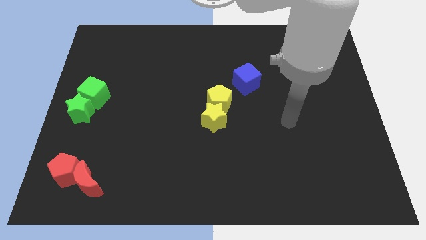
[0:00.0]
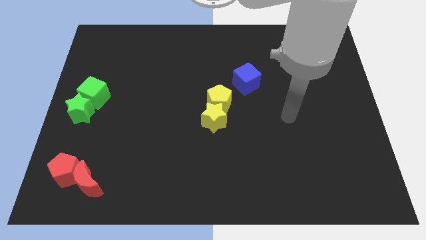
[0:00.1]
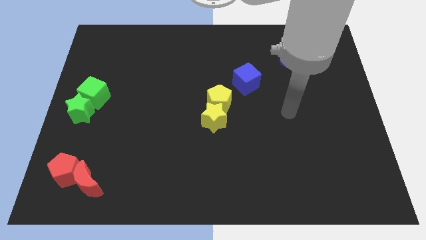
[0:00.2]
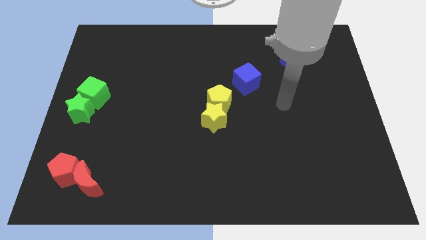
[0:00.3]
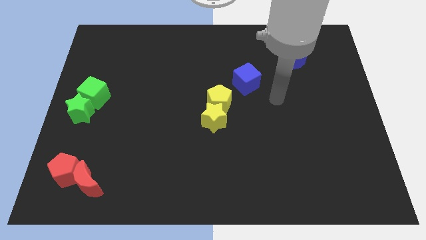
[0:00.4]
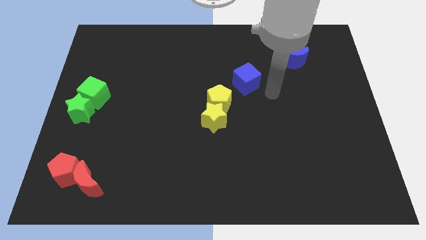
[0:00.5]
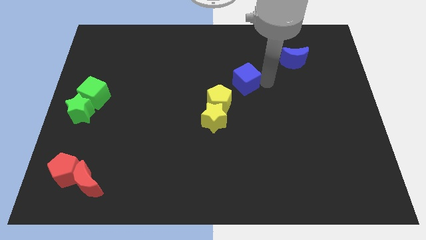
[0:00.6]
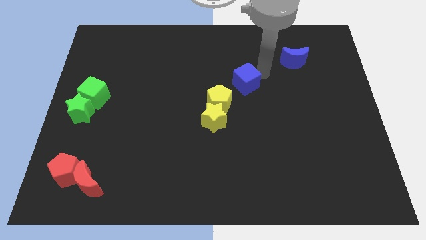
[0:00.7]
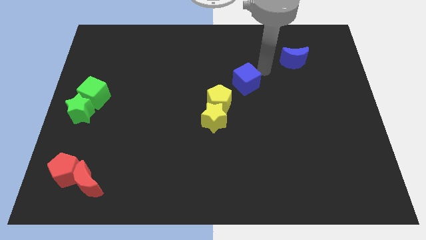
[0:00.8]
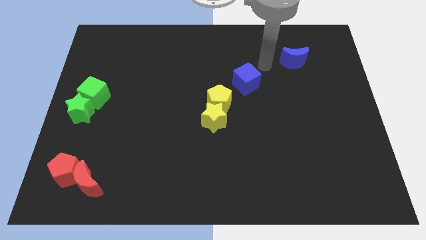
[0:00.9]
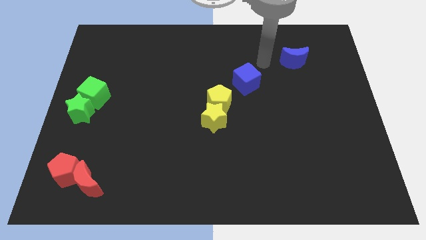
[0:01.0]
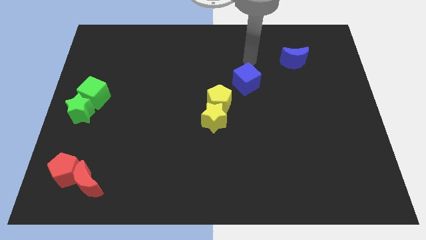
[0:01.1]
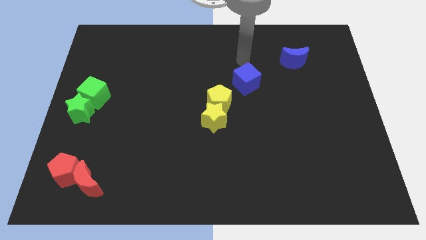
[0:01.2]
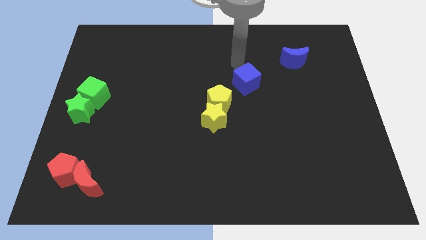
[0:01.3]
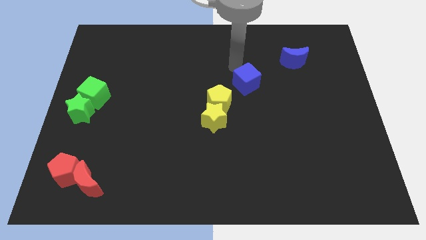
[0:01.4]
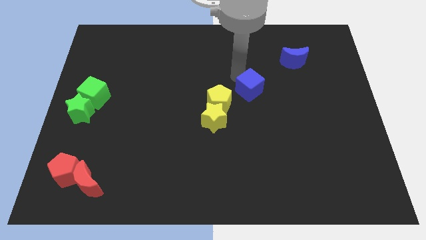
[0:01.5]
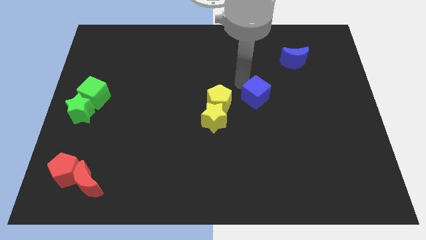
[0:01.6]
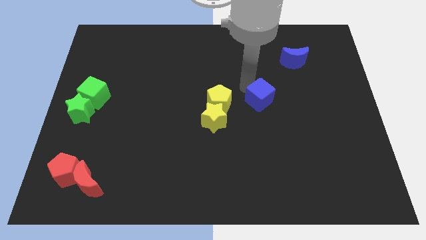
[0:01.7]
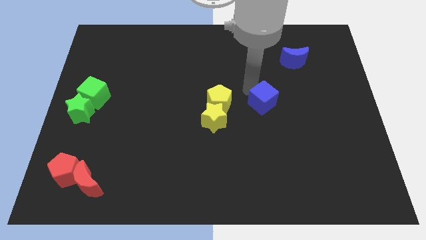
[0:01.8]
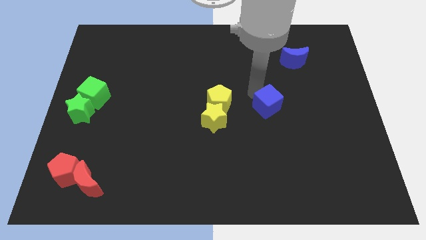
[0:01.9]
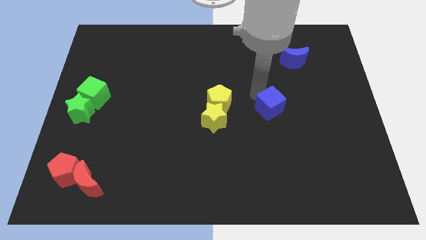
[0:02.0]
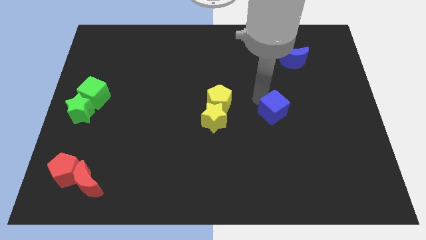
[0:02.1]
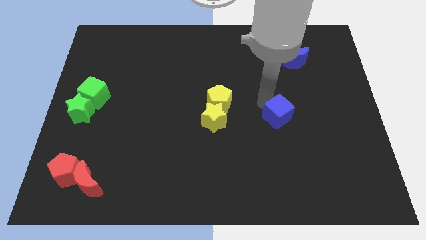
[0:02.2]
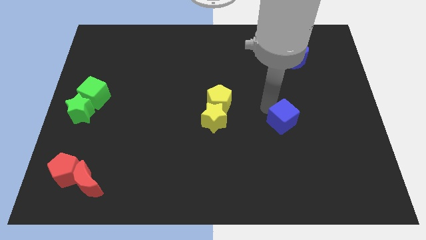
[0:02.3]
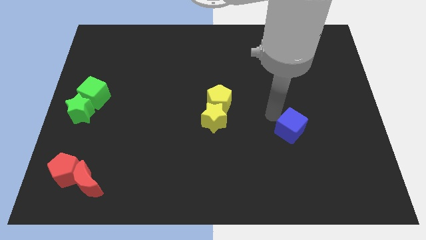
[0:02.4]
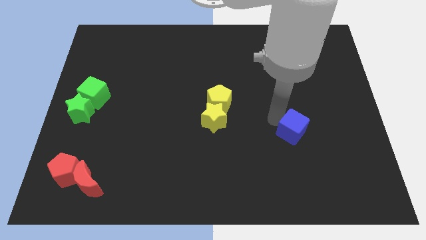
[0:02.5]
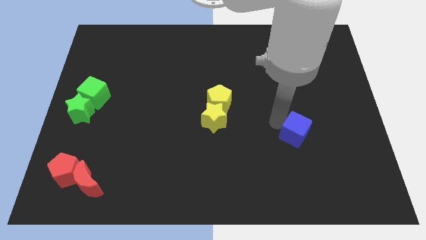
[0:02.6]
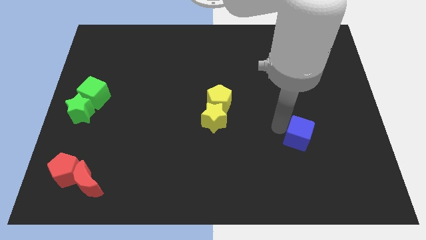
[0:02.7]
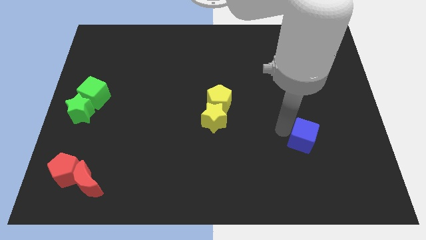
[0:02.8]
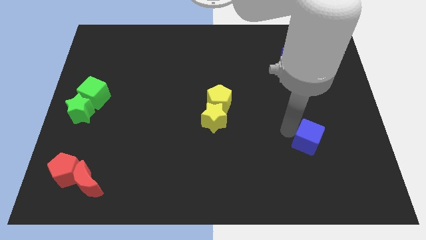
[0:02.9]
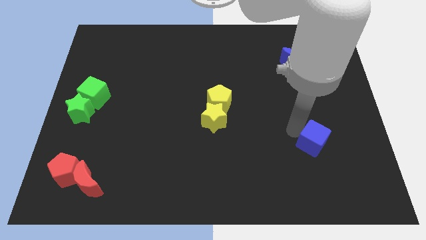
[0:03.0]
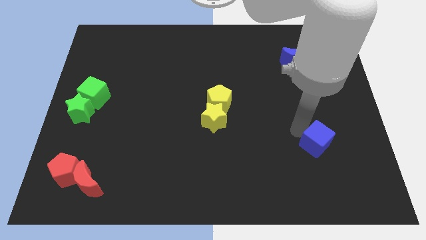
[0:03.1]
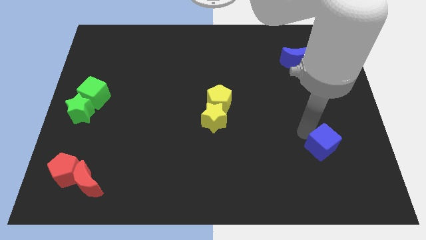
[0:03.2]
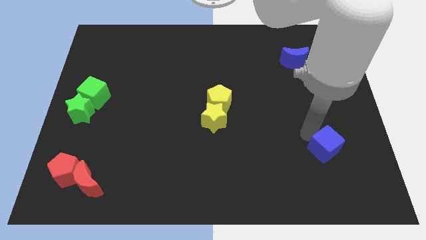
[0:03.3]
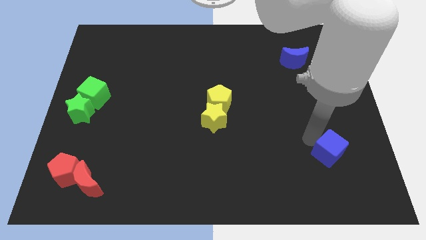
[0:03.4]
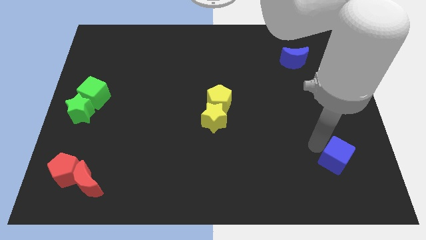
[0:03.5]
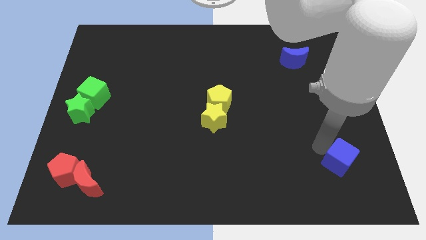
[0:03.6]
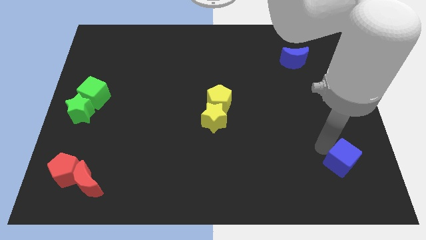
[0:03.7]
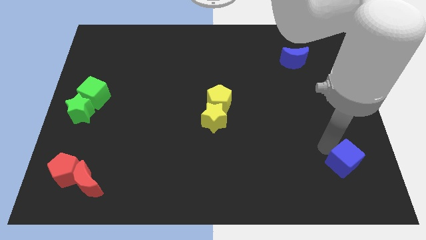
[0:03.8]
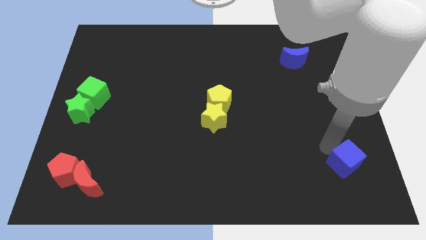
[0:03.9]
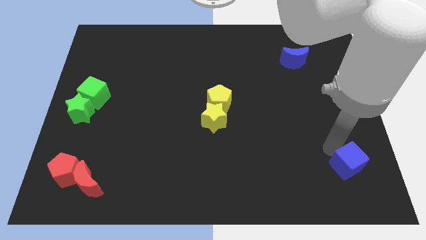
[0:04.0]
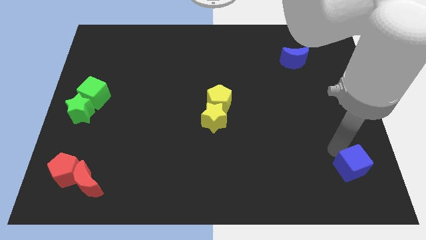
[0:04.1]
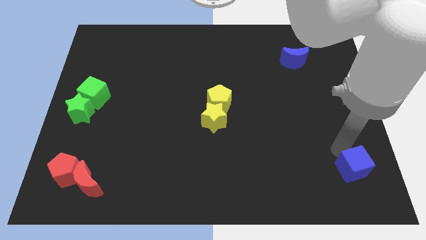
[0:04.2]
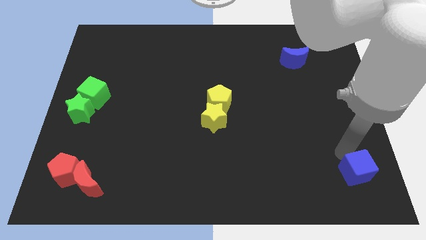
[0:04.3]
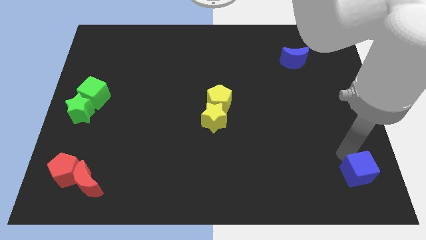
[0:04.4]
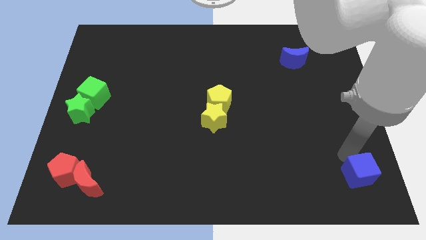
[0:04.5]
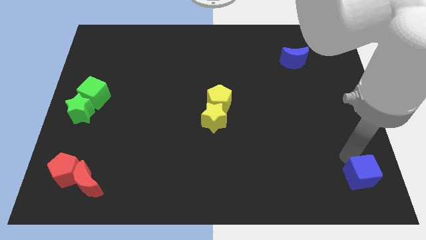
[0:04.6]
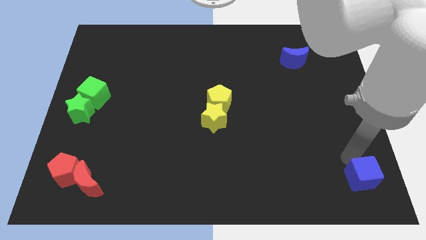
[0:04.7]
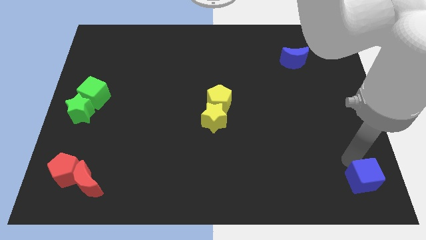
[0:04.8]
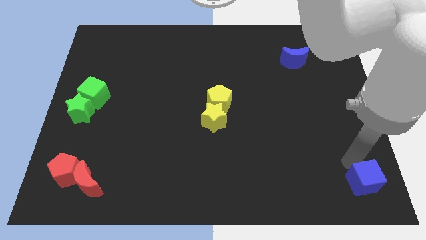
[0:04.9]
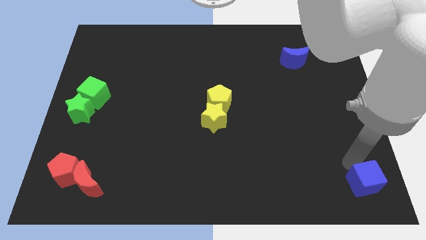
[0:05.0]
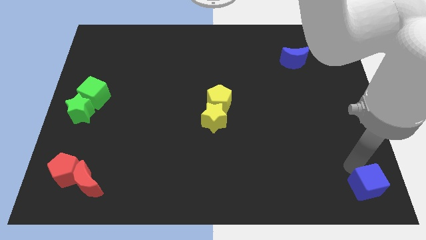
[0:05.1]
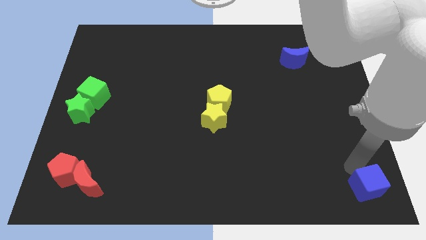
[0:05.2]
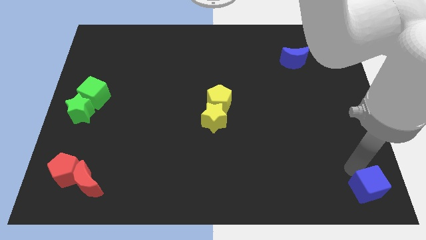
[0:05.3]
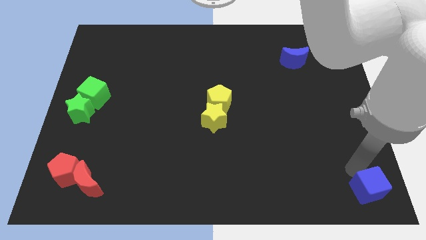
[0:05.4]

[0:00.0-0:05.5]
push the blue cube towards the bottom right corner of the board

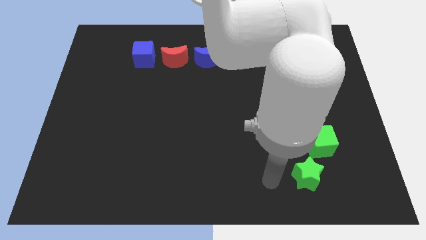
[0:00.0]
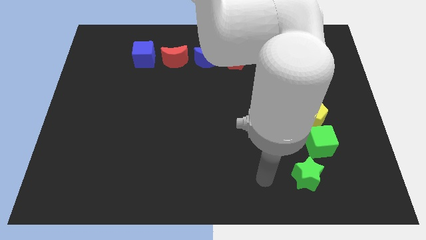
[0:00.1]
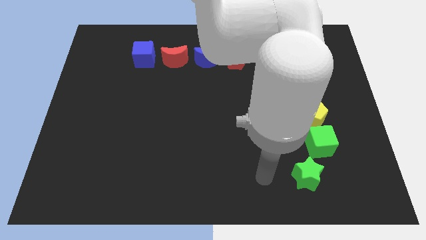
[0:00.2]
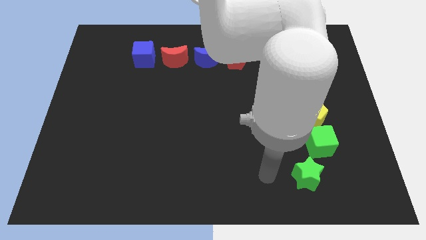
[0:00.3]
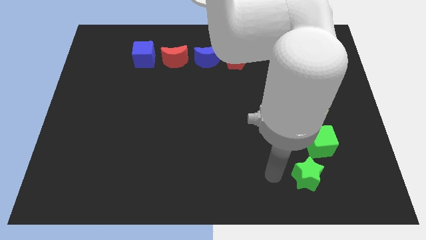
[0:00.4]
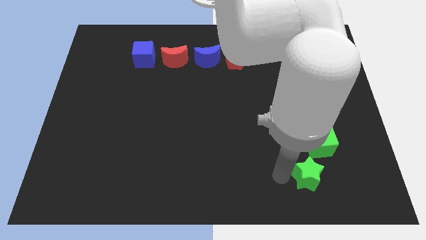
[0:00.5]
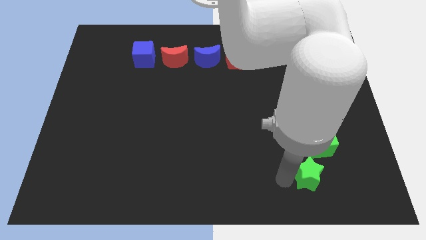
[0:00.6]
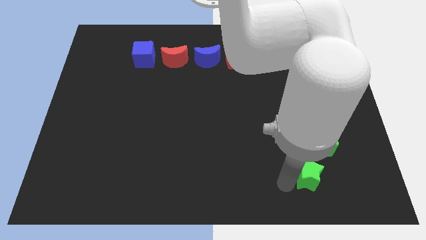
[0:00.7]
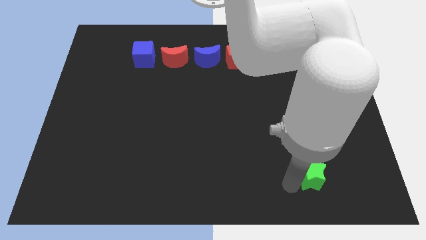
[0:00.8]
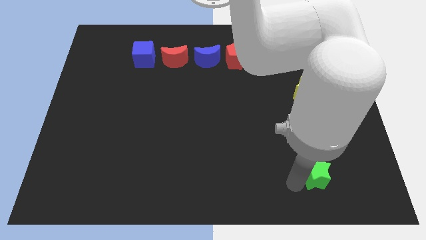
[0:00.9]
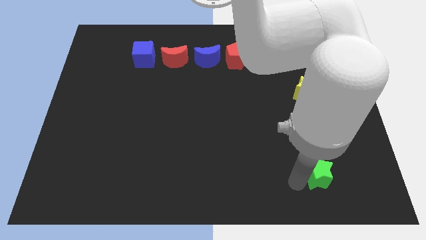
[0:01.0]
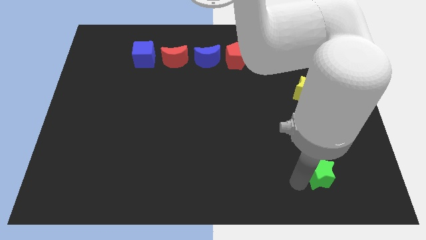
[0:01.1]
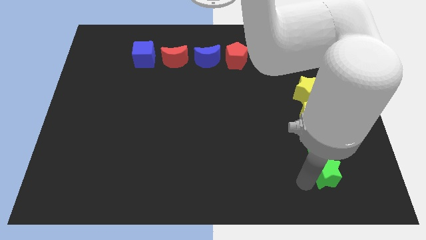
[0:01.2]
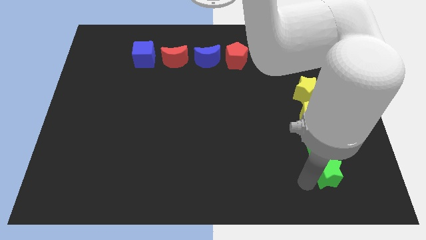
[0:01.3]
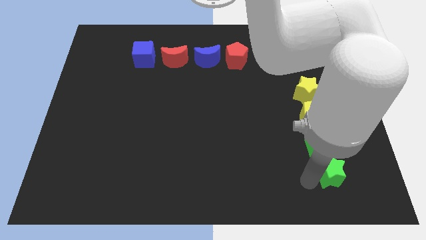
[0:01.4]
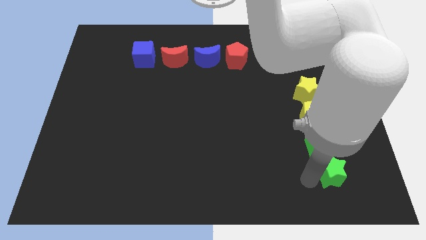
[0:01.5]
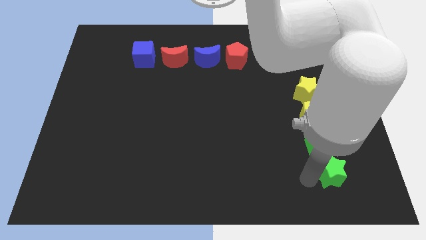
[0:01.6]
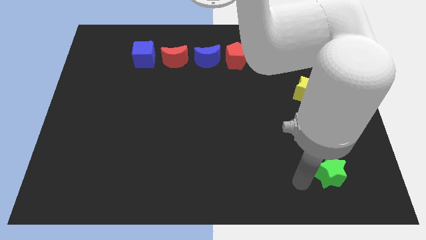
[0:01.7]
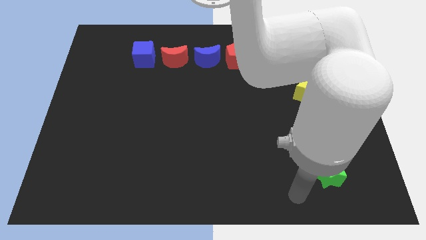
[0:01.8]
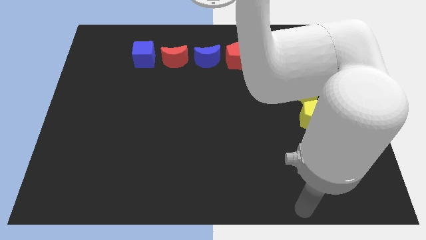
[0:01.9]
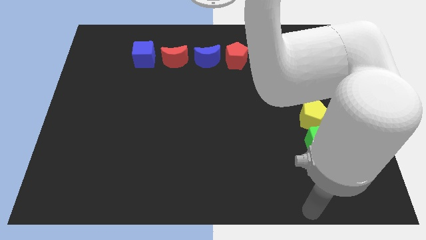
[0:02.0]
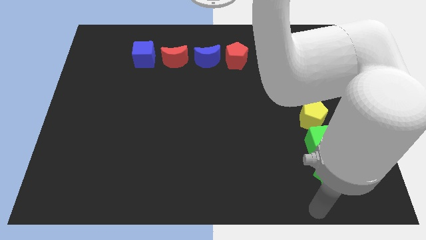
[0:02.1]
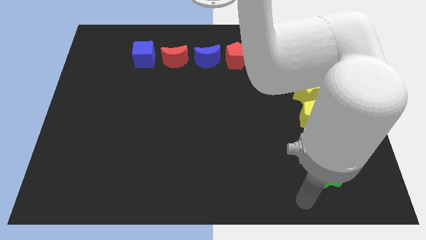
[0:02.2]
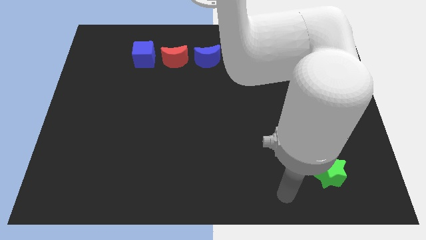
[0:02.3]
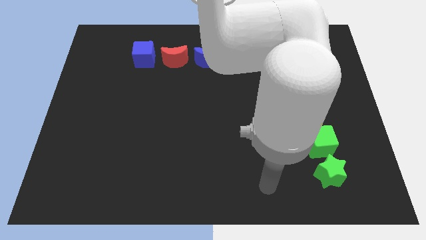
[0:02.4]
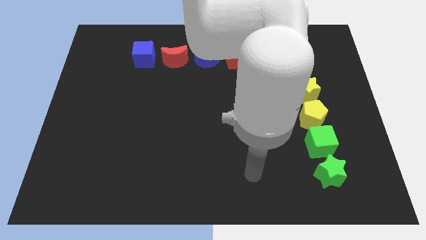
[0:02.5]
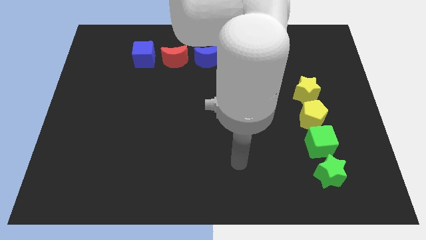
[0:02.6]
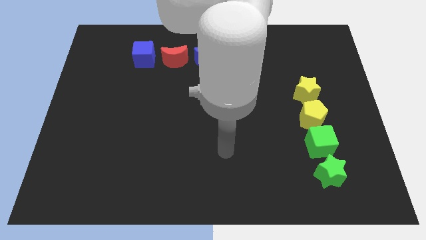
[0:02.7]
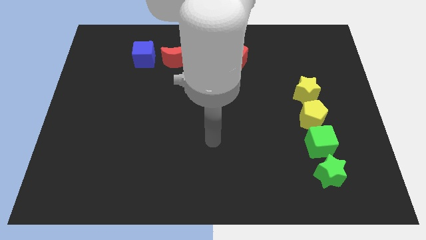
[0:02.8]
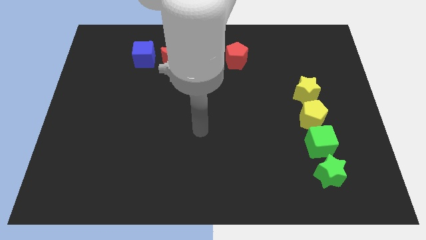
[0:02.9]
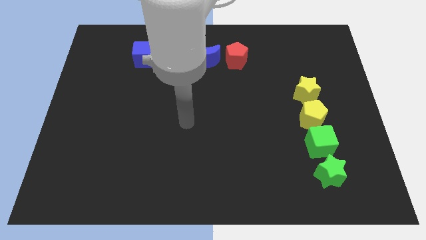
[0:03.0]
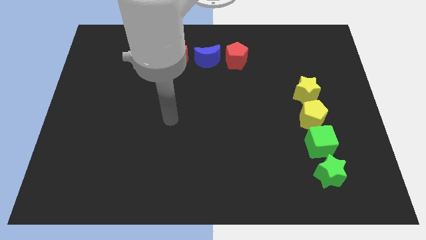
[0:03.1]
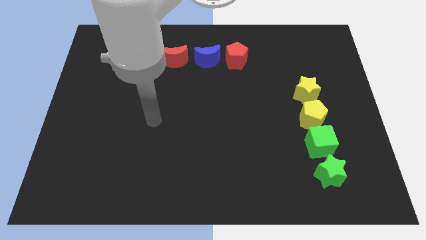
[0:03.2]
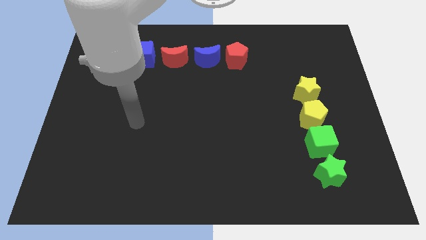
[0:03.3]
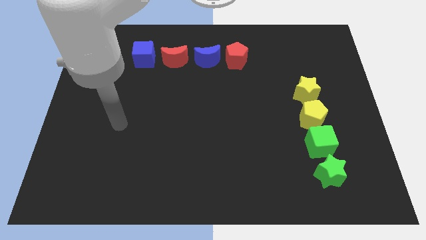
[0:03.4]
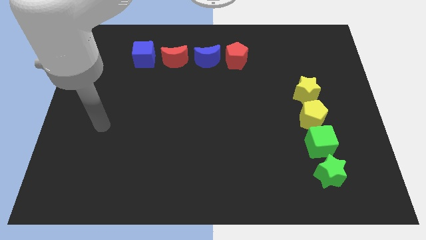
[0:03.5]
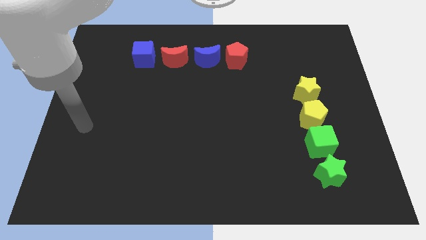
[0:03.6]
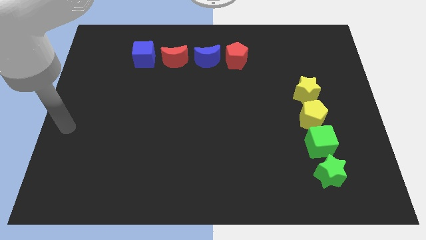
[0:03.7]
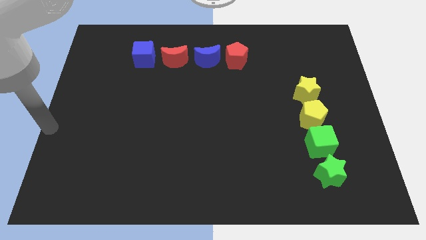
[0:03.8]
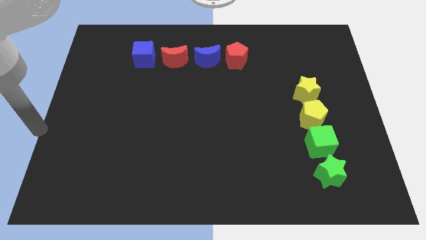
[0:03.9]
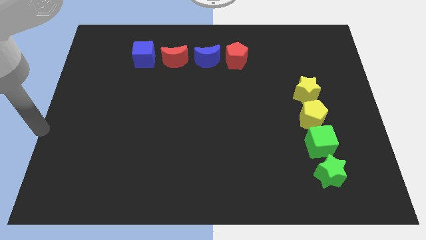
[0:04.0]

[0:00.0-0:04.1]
adjust the green star to form a vertical line with yellow blocks and the green cube
